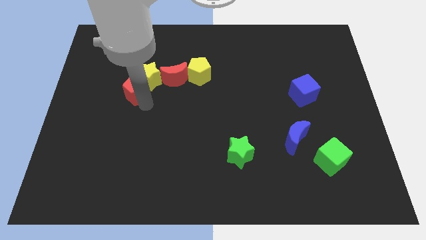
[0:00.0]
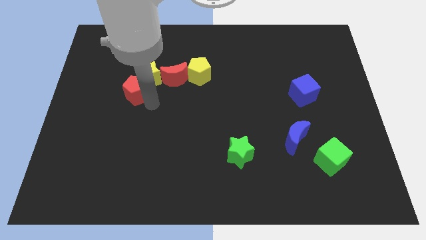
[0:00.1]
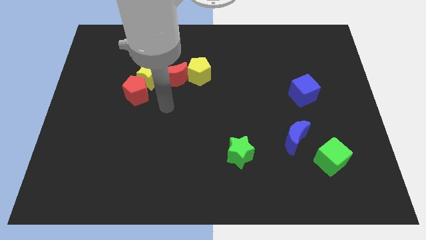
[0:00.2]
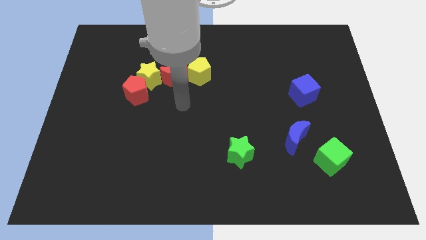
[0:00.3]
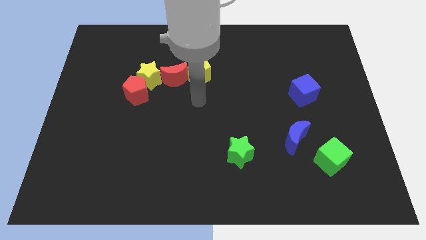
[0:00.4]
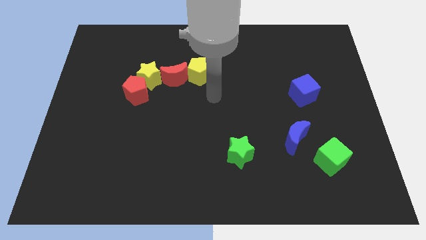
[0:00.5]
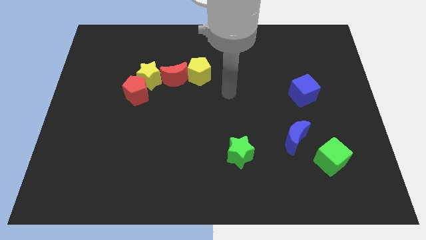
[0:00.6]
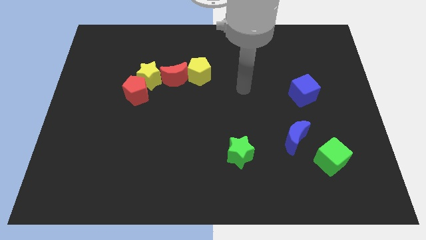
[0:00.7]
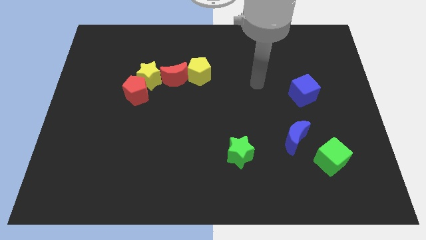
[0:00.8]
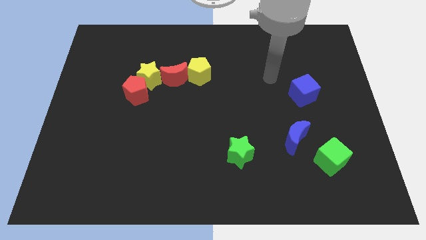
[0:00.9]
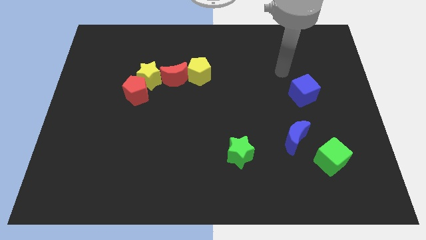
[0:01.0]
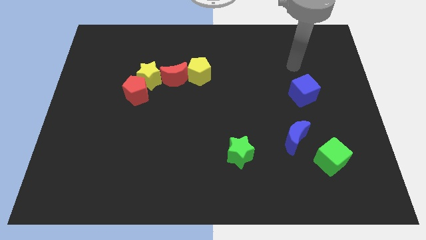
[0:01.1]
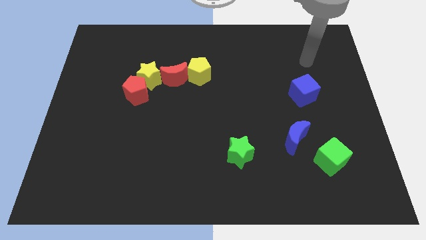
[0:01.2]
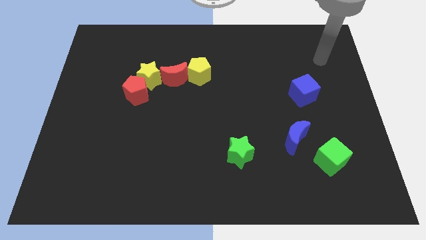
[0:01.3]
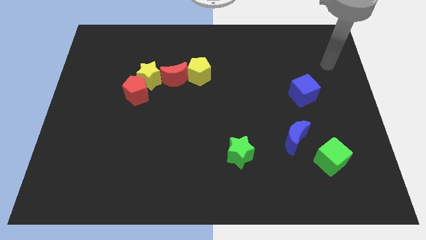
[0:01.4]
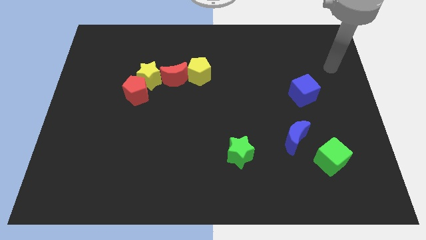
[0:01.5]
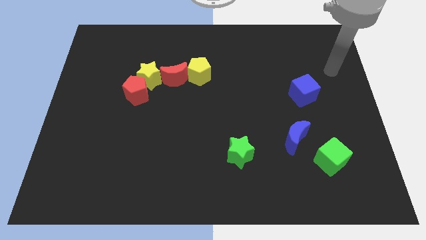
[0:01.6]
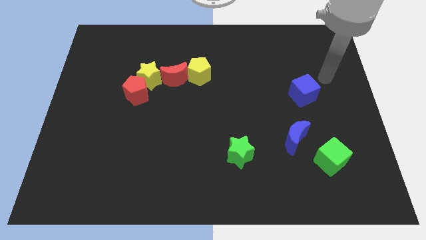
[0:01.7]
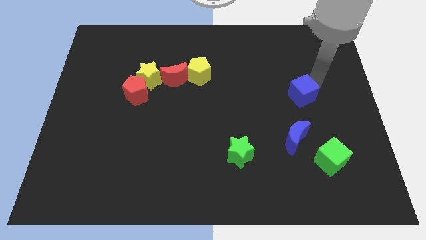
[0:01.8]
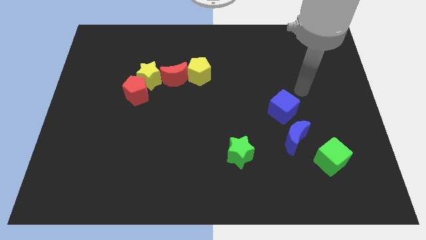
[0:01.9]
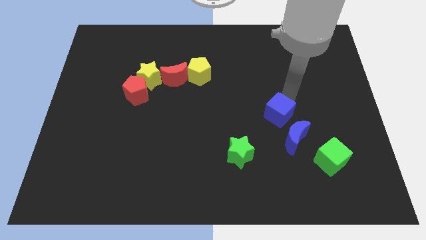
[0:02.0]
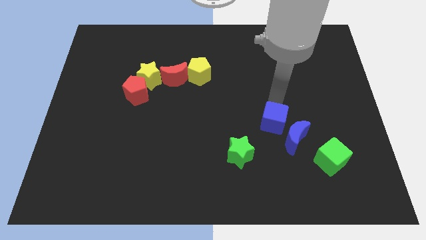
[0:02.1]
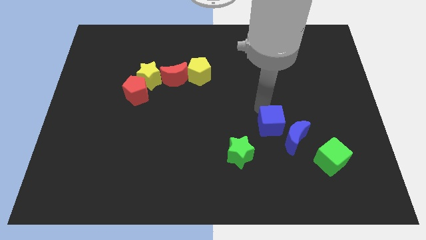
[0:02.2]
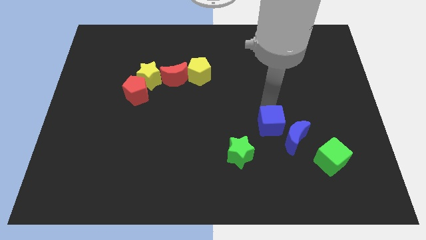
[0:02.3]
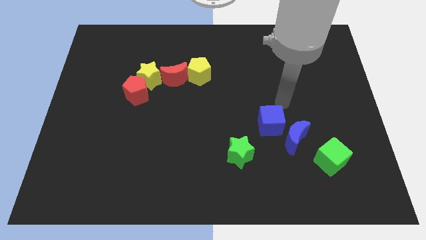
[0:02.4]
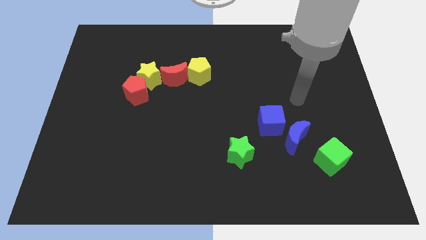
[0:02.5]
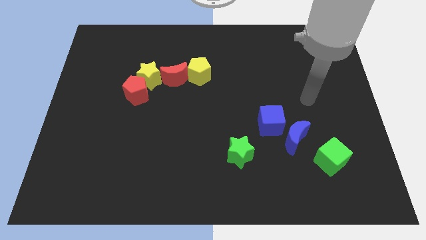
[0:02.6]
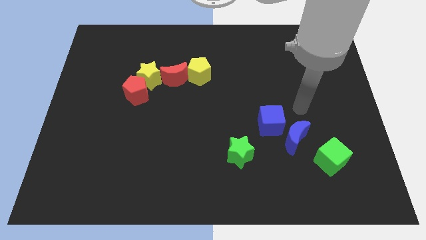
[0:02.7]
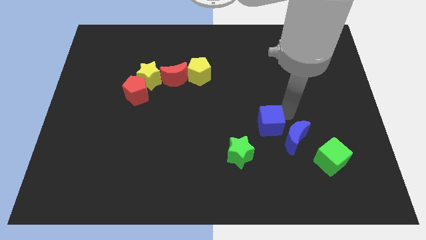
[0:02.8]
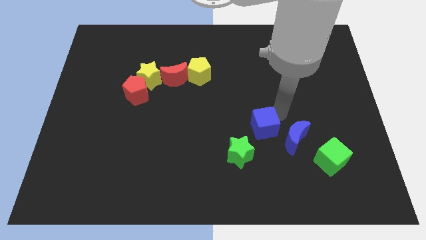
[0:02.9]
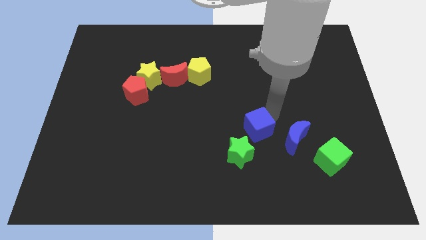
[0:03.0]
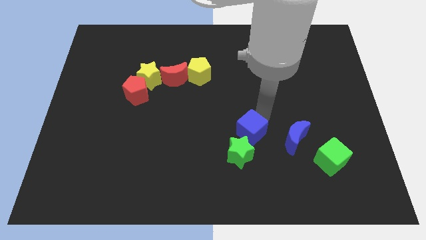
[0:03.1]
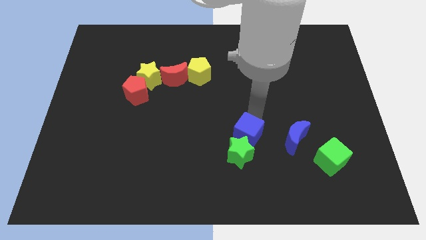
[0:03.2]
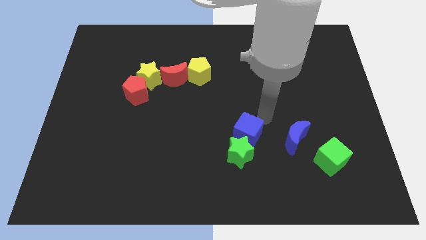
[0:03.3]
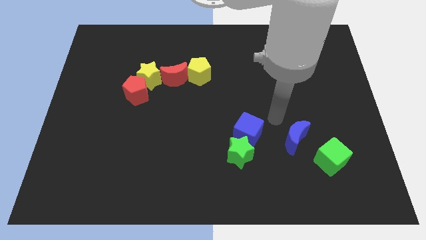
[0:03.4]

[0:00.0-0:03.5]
push the blue cube to the top of the green star

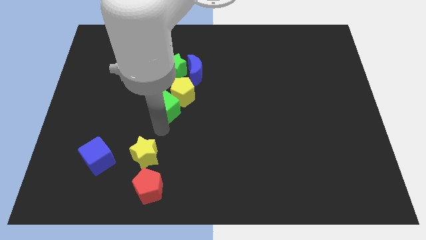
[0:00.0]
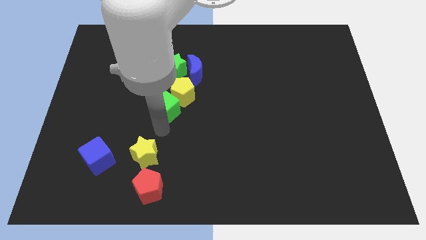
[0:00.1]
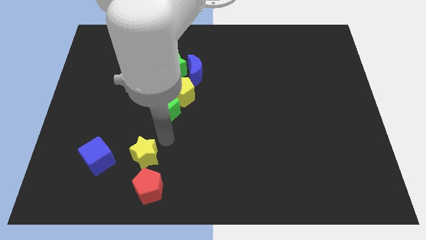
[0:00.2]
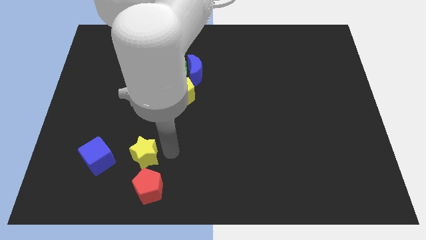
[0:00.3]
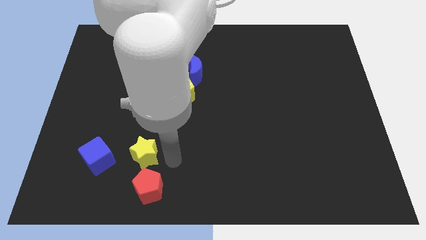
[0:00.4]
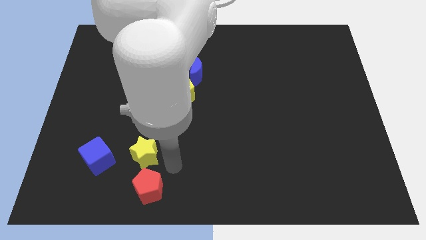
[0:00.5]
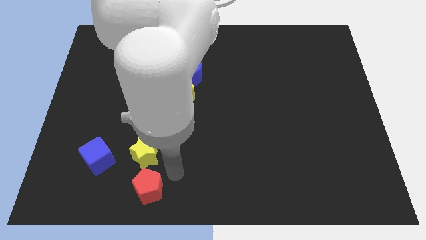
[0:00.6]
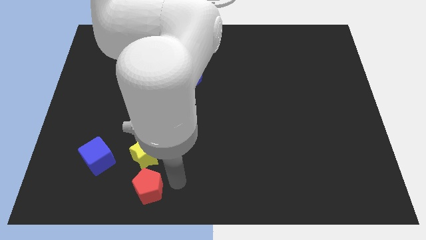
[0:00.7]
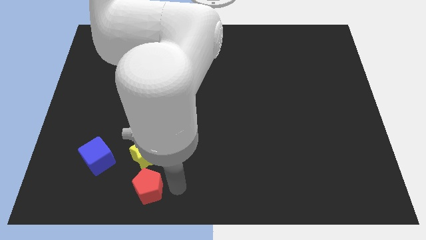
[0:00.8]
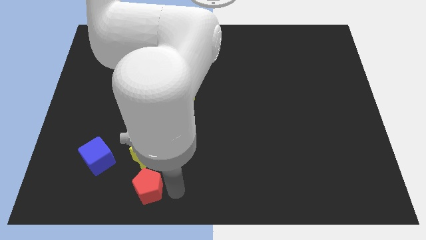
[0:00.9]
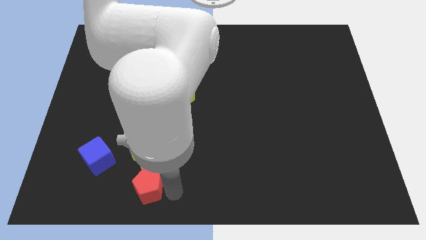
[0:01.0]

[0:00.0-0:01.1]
move the arm right to the red pentagon

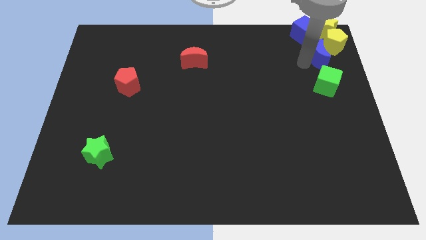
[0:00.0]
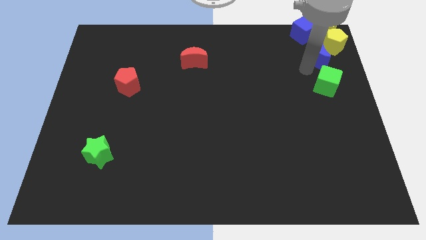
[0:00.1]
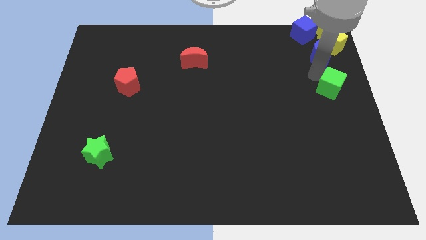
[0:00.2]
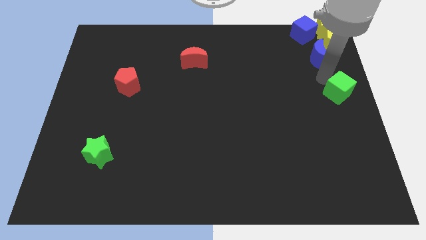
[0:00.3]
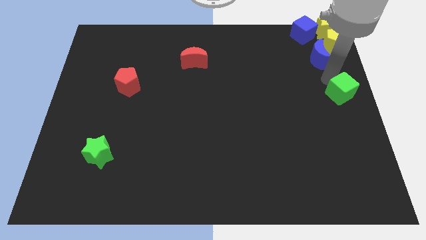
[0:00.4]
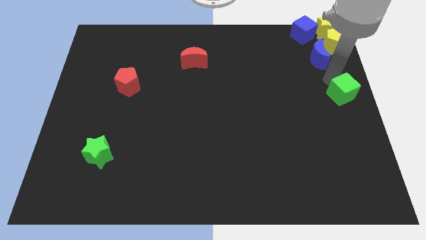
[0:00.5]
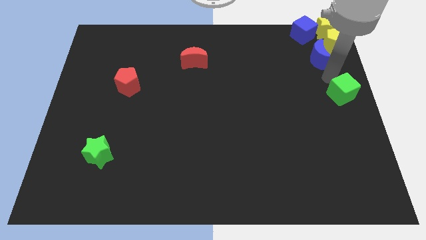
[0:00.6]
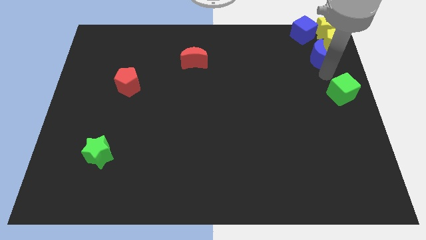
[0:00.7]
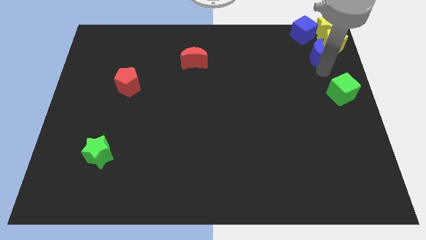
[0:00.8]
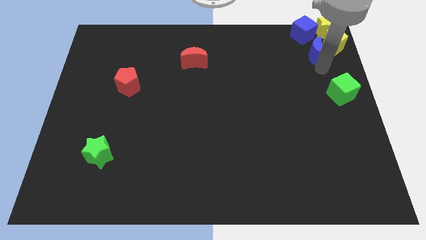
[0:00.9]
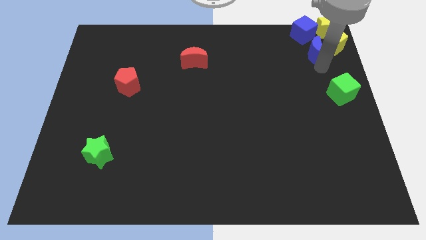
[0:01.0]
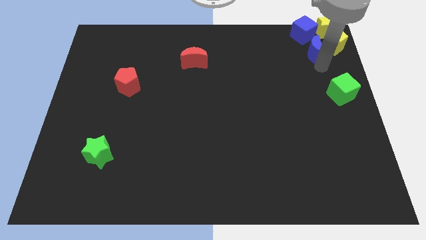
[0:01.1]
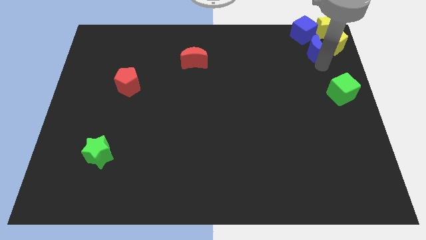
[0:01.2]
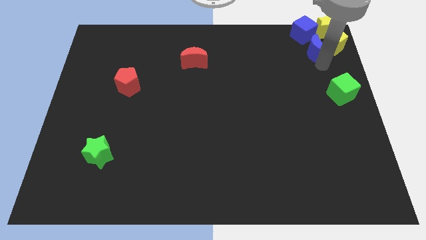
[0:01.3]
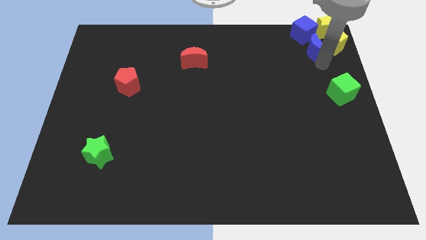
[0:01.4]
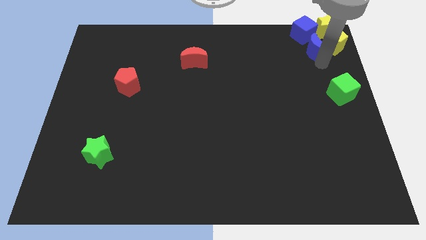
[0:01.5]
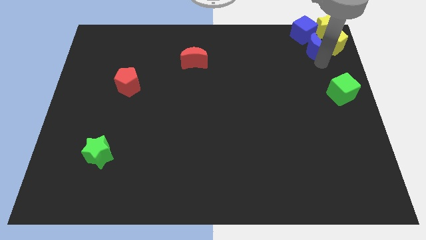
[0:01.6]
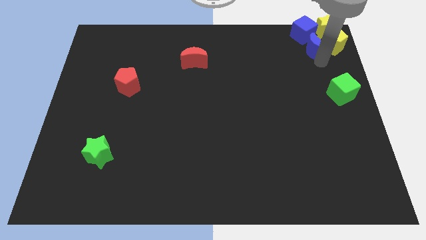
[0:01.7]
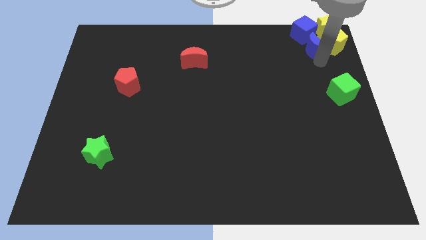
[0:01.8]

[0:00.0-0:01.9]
separate the green cube and the blue moon

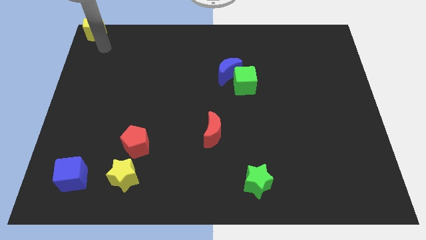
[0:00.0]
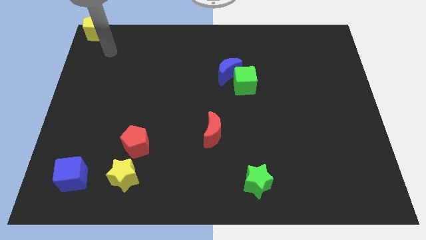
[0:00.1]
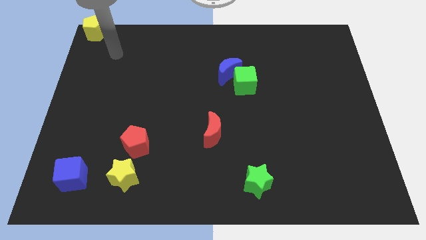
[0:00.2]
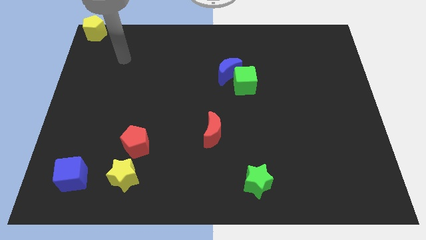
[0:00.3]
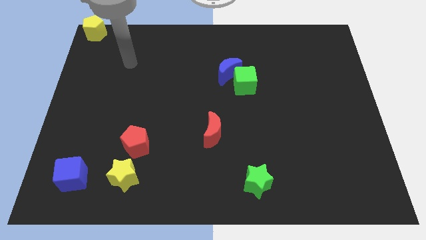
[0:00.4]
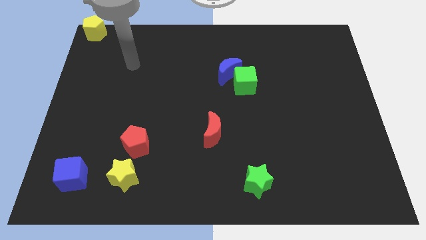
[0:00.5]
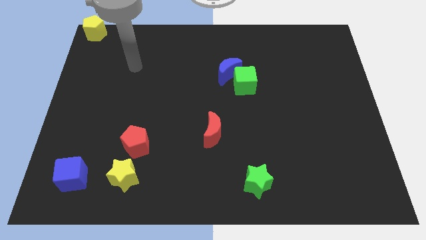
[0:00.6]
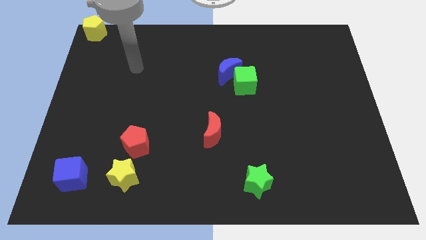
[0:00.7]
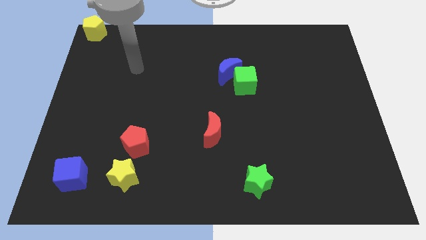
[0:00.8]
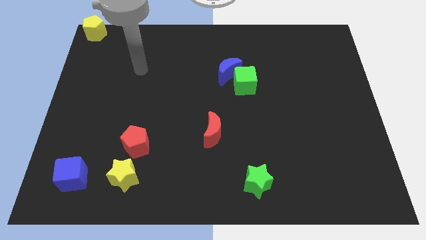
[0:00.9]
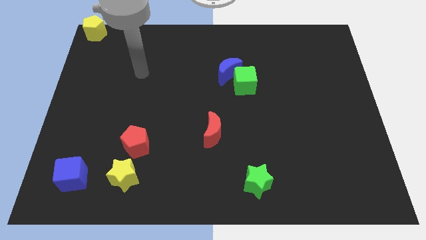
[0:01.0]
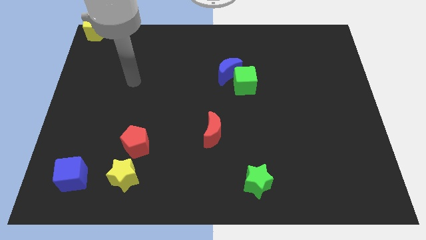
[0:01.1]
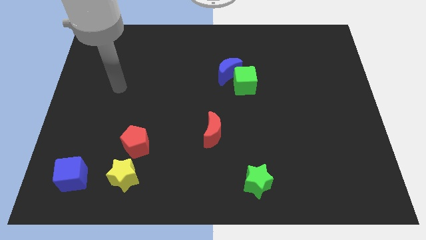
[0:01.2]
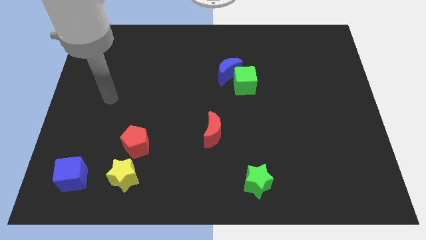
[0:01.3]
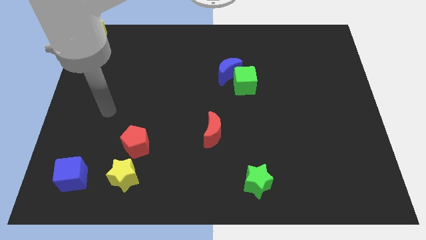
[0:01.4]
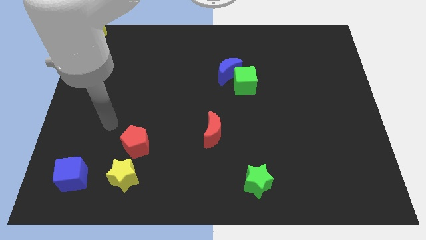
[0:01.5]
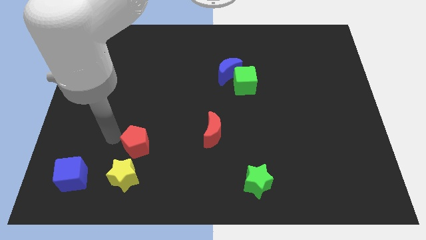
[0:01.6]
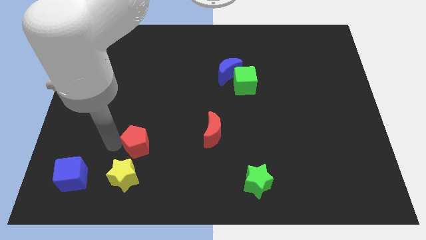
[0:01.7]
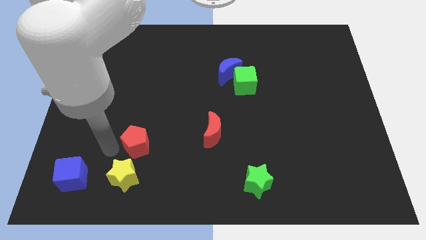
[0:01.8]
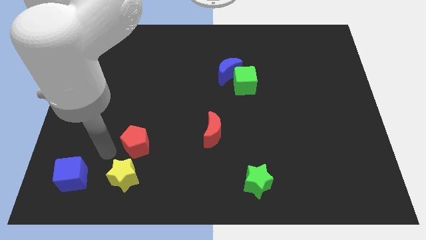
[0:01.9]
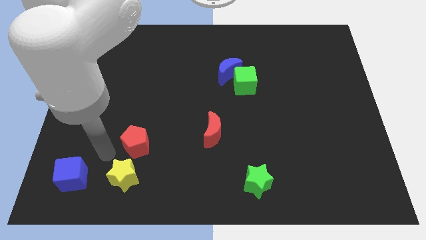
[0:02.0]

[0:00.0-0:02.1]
move your arm away from yellow pentagon

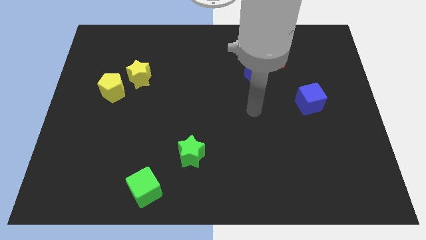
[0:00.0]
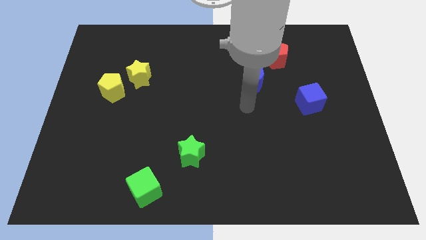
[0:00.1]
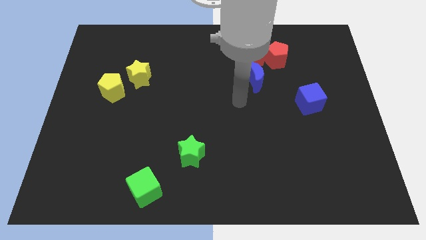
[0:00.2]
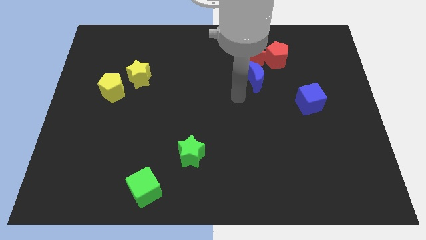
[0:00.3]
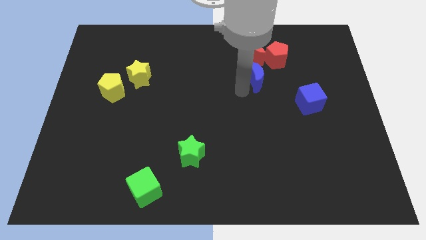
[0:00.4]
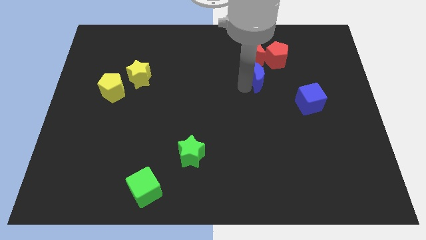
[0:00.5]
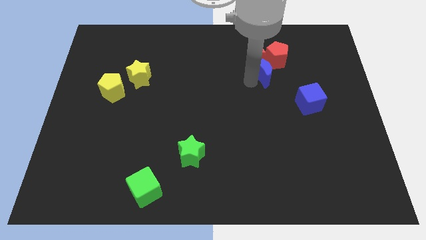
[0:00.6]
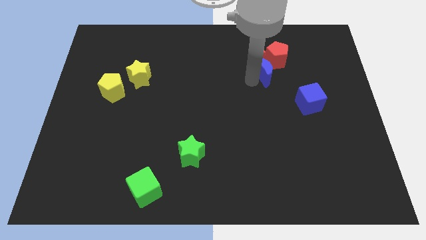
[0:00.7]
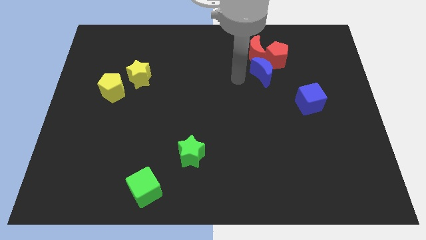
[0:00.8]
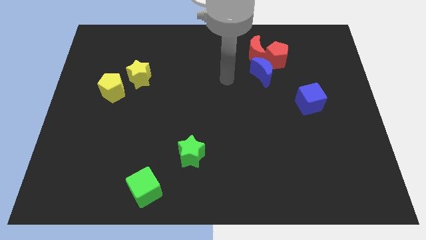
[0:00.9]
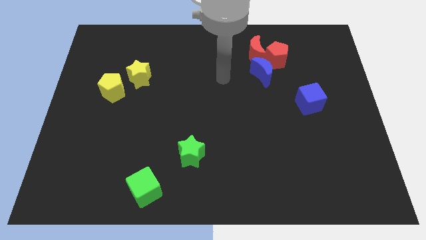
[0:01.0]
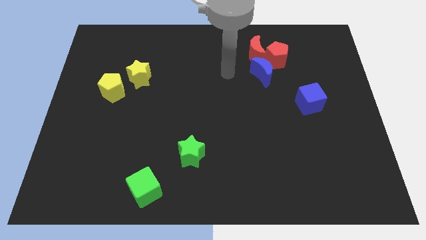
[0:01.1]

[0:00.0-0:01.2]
slide the blue crescent into the red crescent
